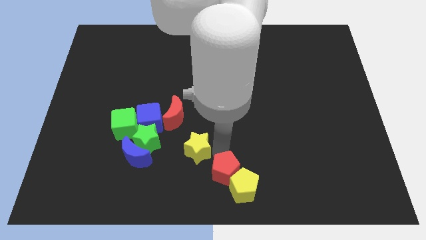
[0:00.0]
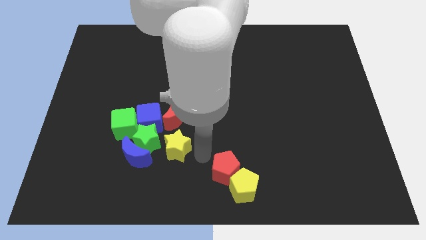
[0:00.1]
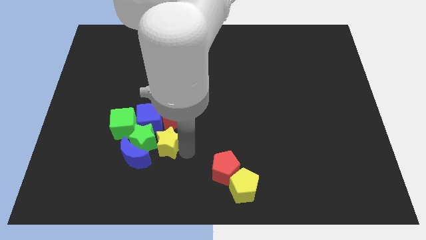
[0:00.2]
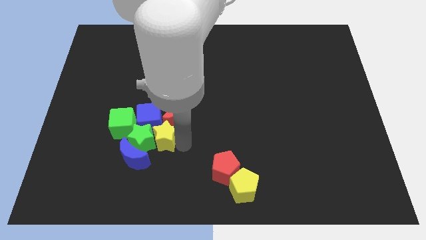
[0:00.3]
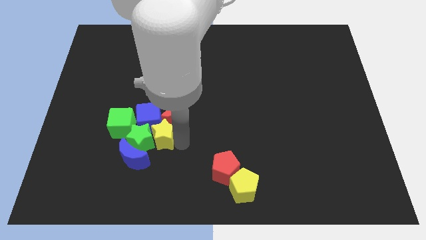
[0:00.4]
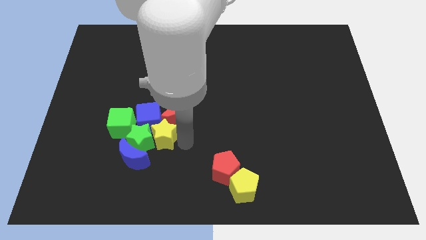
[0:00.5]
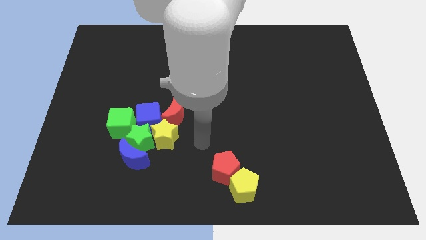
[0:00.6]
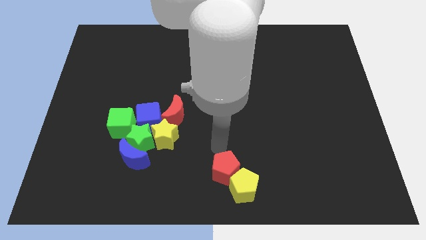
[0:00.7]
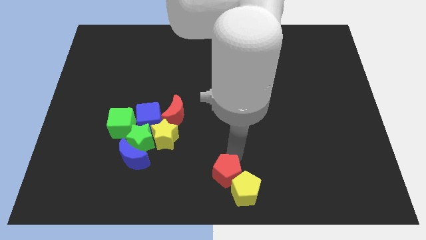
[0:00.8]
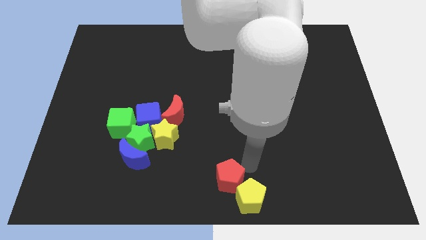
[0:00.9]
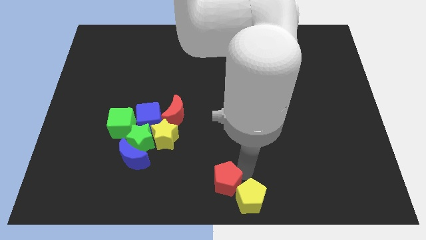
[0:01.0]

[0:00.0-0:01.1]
push the yellow star into the group of blocks

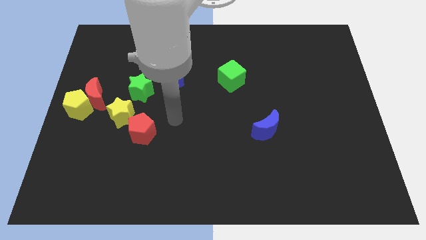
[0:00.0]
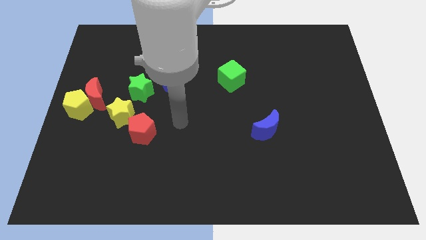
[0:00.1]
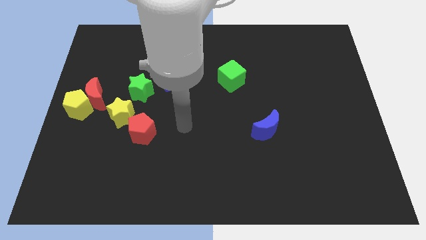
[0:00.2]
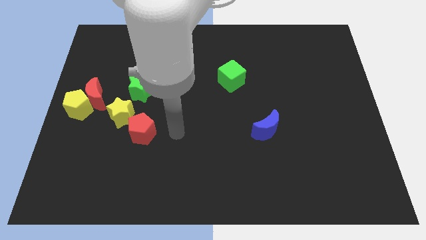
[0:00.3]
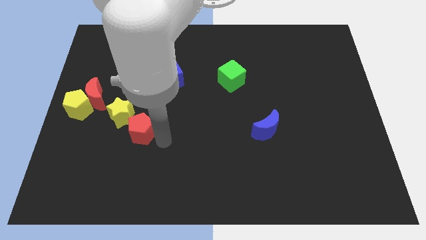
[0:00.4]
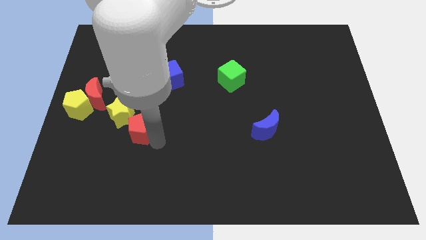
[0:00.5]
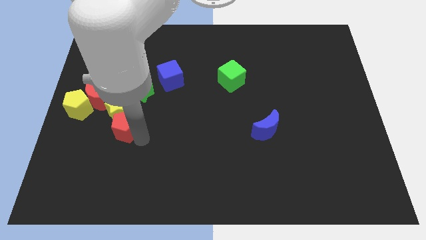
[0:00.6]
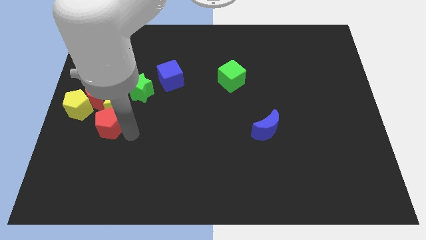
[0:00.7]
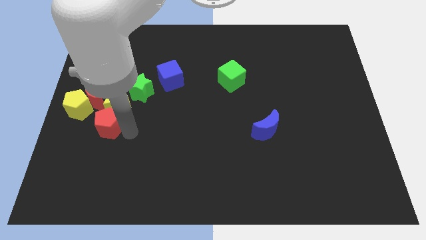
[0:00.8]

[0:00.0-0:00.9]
place the red pentagon to the bottom of the yellow star

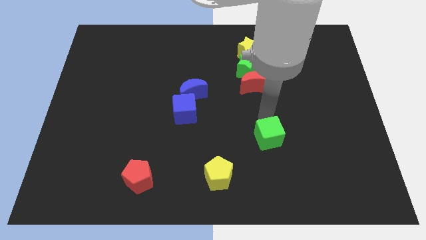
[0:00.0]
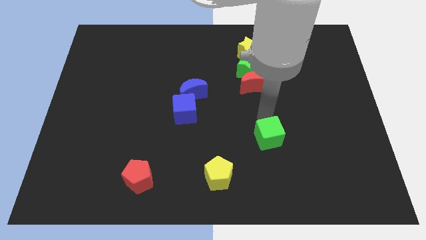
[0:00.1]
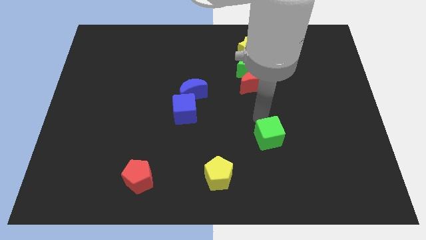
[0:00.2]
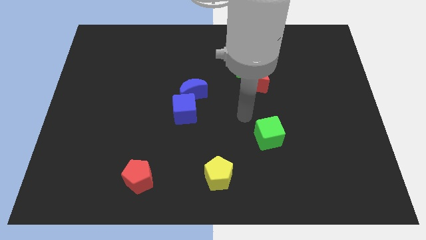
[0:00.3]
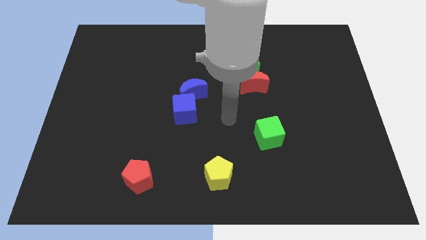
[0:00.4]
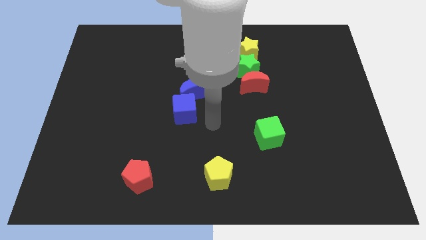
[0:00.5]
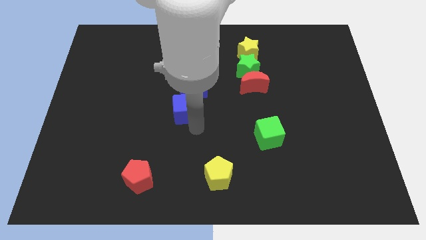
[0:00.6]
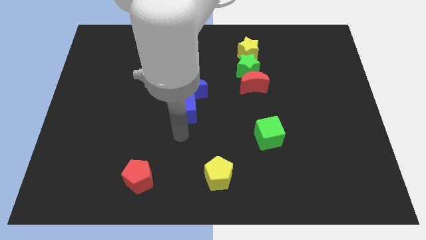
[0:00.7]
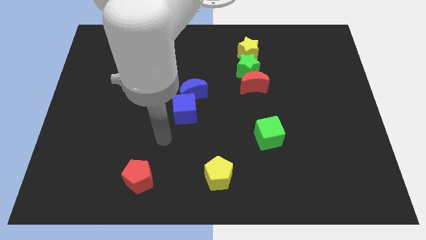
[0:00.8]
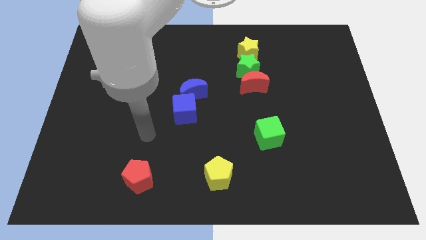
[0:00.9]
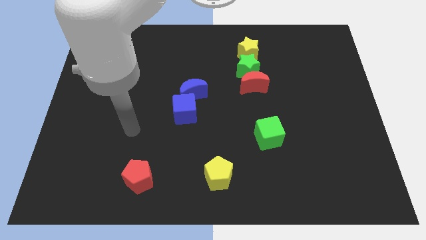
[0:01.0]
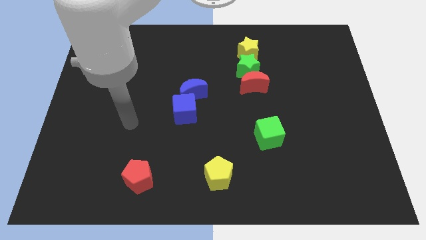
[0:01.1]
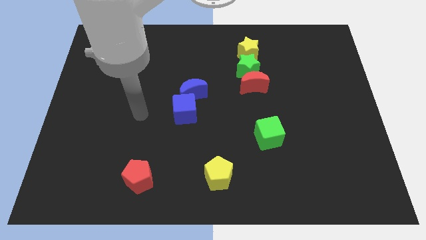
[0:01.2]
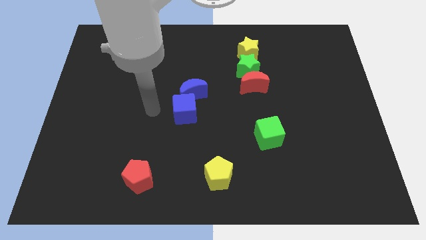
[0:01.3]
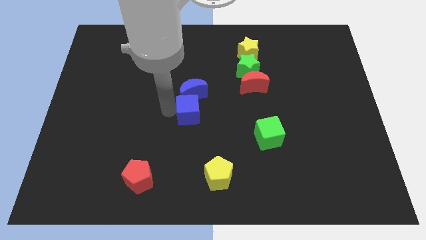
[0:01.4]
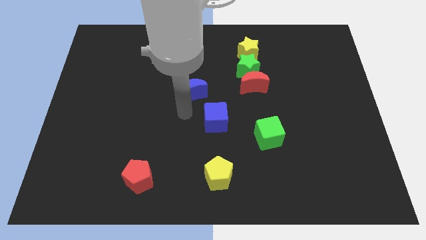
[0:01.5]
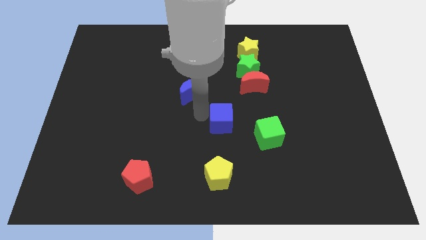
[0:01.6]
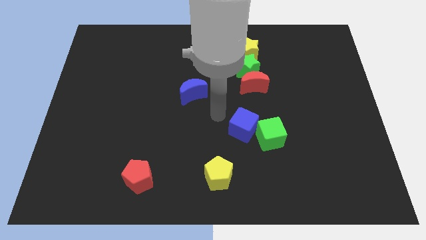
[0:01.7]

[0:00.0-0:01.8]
push the blue cube into the green cube

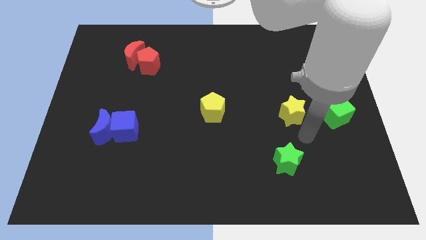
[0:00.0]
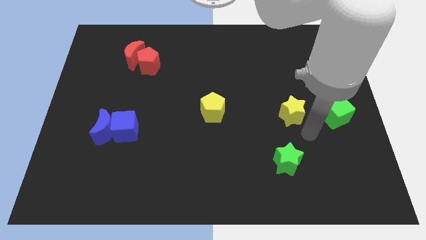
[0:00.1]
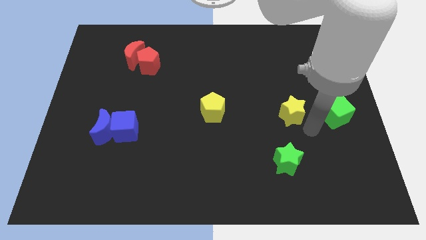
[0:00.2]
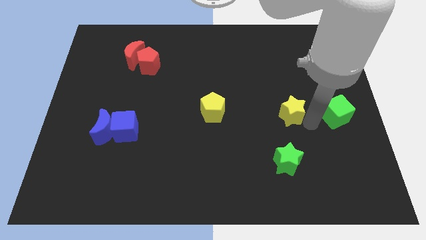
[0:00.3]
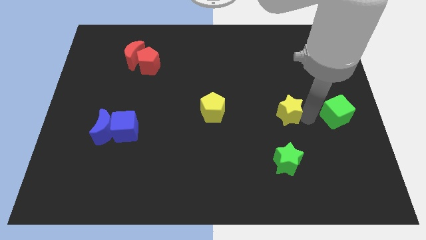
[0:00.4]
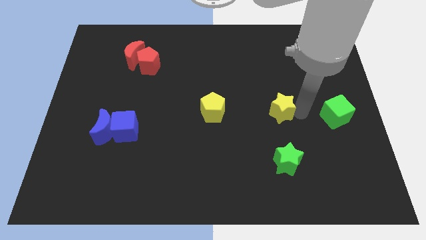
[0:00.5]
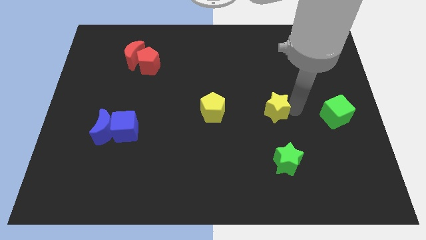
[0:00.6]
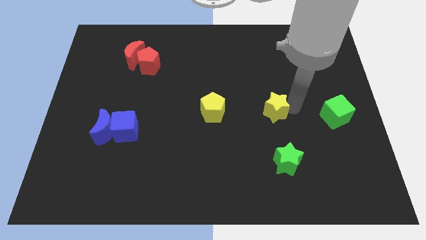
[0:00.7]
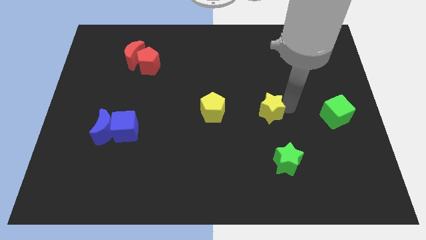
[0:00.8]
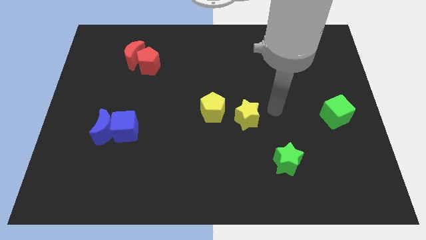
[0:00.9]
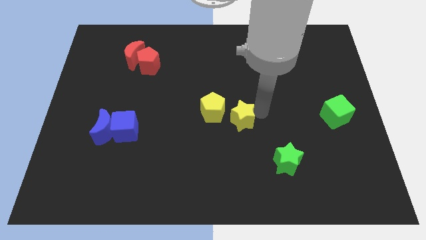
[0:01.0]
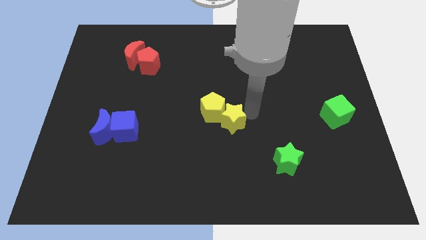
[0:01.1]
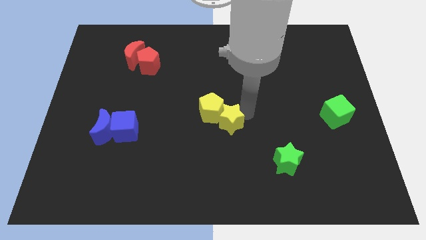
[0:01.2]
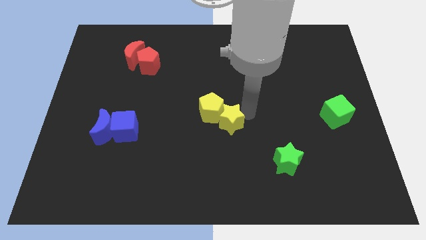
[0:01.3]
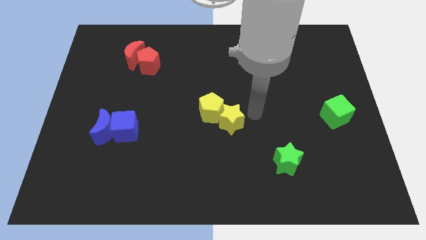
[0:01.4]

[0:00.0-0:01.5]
put the yellow star at the bottom right of the yellow pentagon

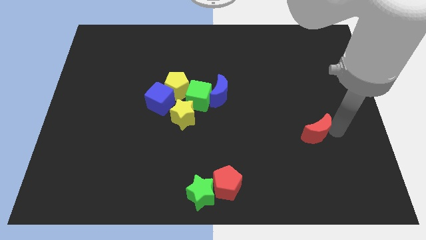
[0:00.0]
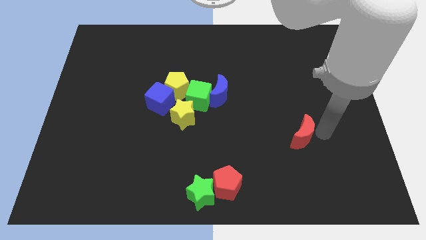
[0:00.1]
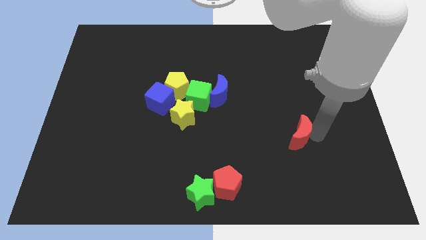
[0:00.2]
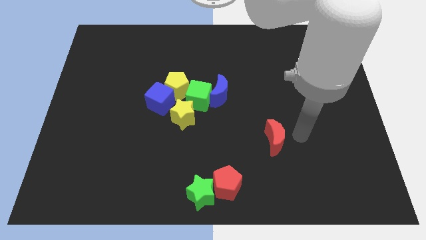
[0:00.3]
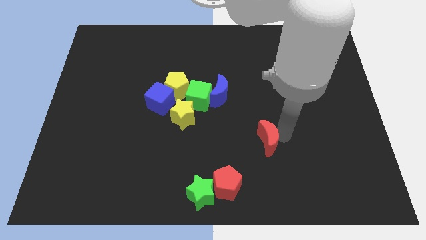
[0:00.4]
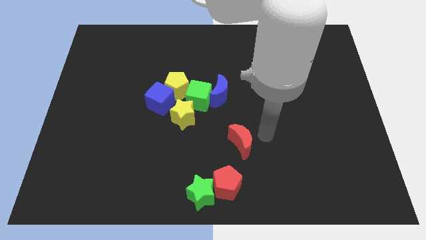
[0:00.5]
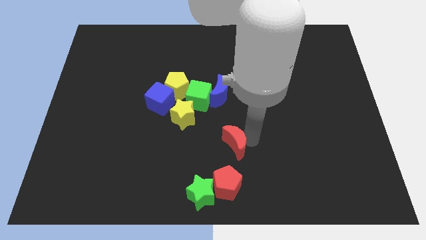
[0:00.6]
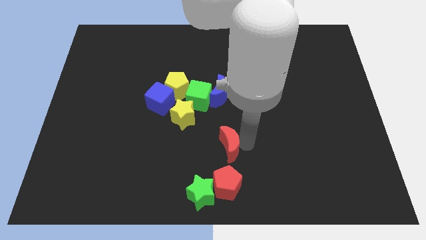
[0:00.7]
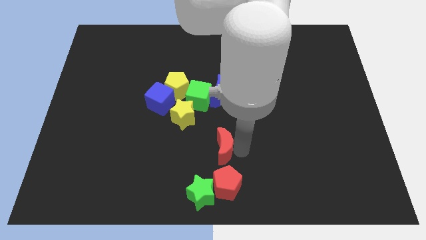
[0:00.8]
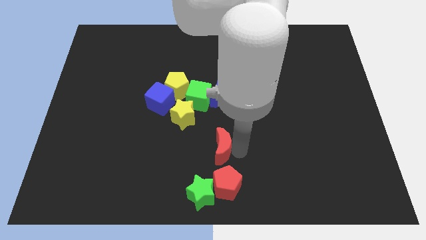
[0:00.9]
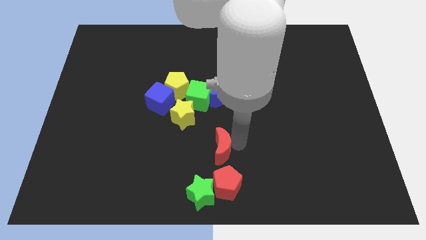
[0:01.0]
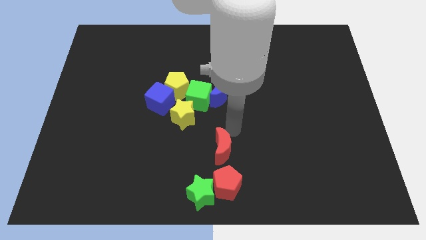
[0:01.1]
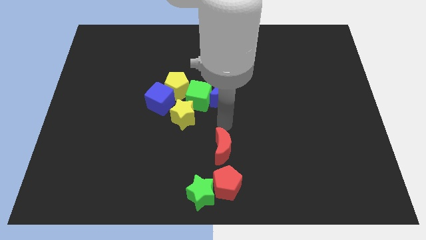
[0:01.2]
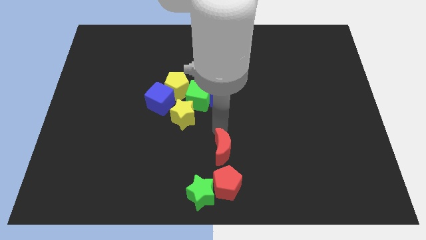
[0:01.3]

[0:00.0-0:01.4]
move the red crescent to the top of red pentagon

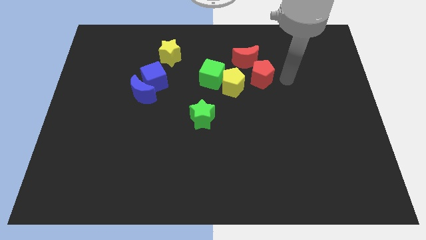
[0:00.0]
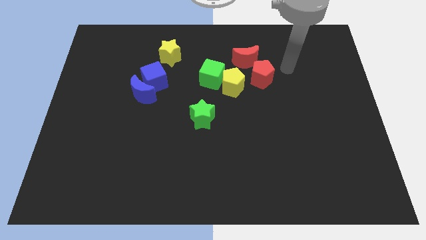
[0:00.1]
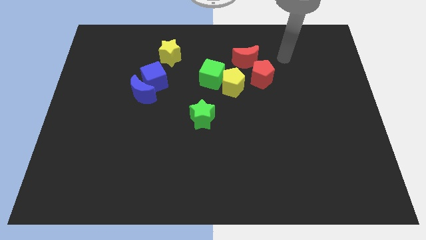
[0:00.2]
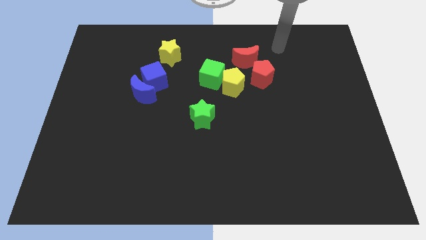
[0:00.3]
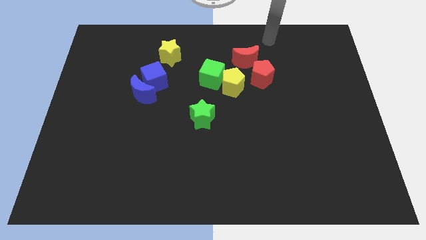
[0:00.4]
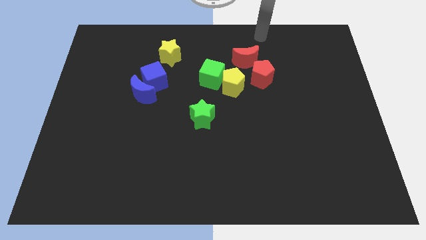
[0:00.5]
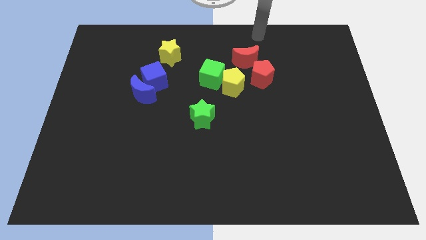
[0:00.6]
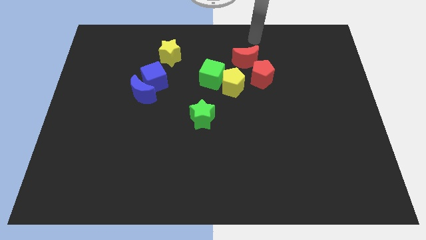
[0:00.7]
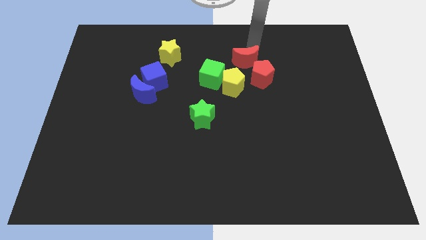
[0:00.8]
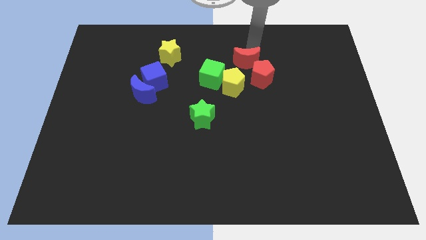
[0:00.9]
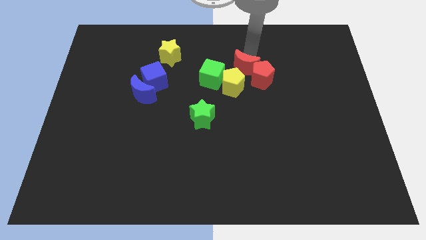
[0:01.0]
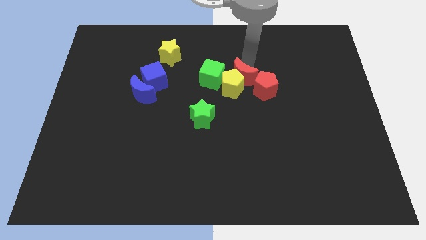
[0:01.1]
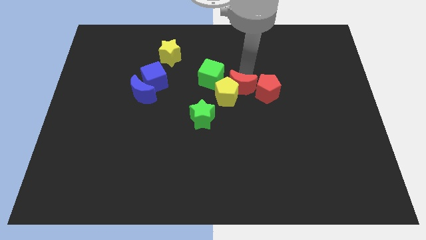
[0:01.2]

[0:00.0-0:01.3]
place the red moon into the red pentagon

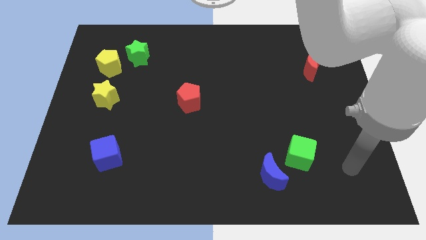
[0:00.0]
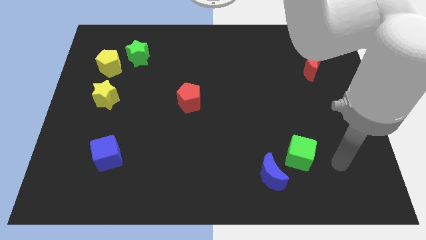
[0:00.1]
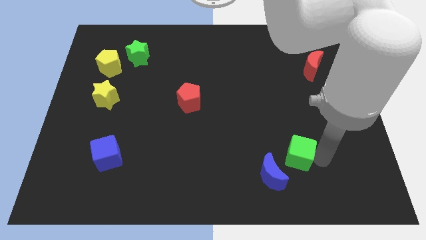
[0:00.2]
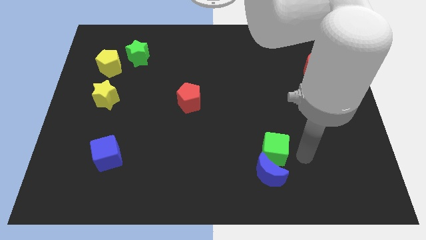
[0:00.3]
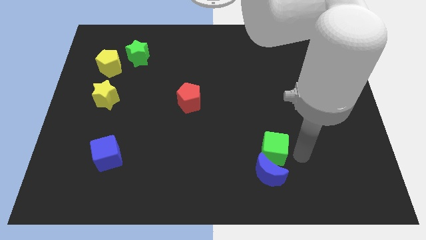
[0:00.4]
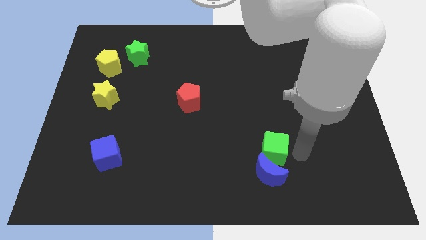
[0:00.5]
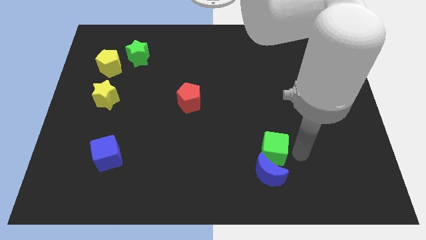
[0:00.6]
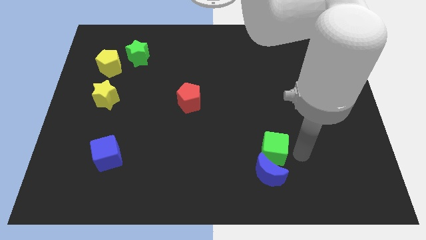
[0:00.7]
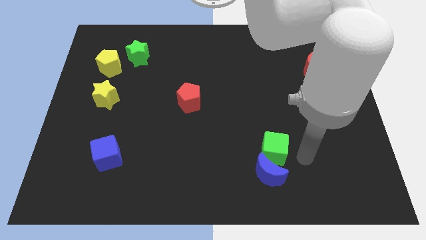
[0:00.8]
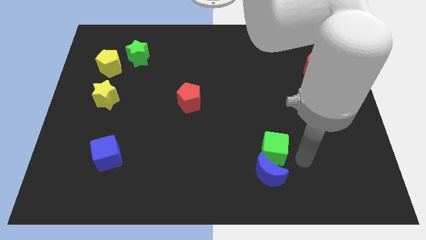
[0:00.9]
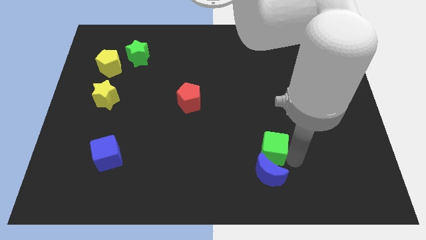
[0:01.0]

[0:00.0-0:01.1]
push the green cube into the blue moon
